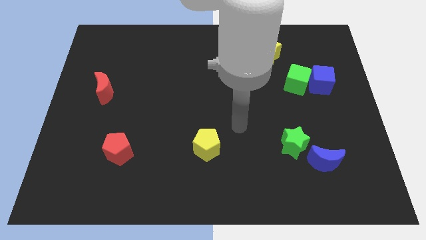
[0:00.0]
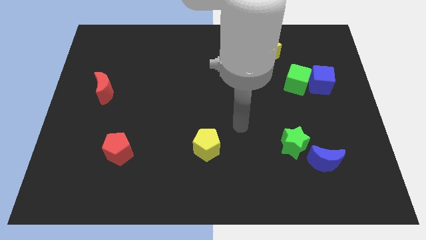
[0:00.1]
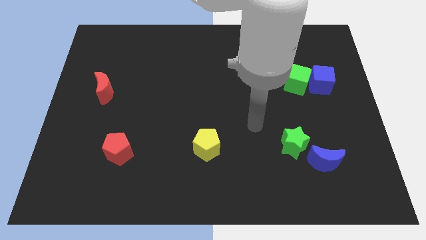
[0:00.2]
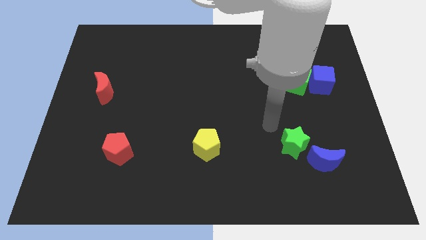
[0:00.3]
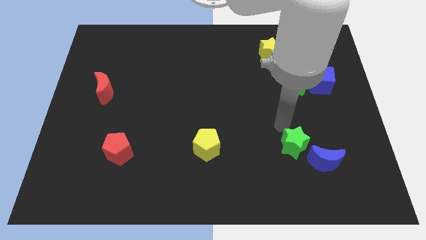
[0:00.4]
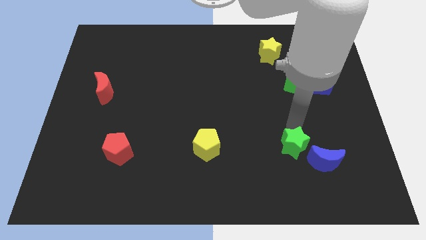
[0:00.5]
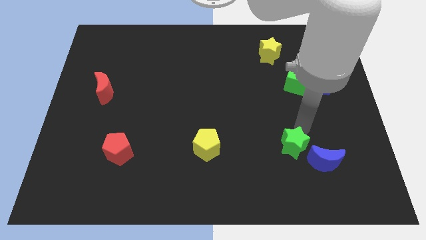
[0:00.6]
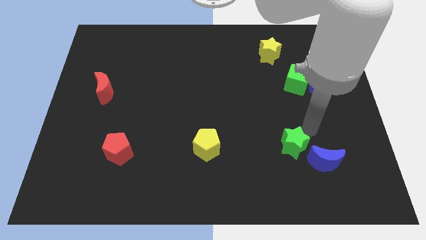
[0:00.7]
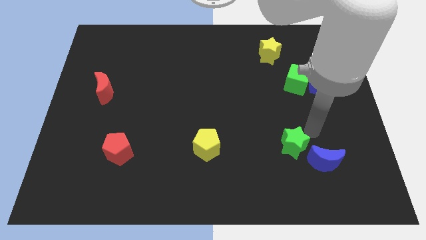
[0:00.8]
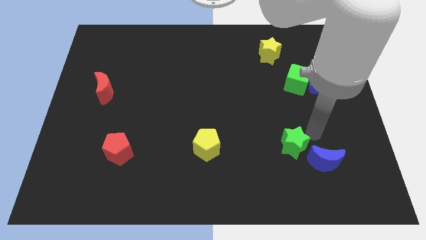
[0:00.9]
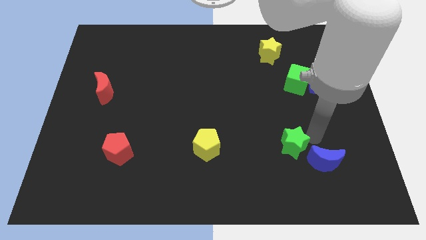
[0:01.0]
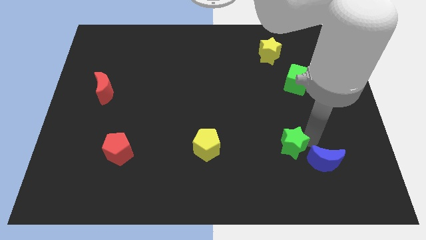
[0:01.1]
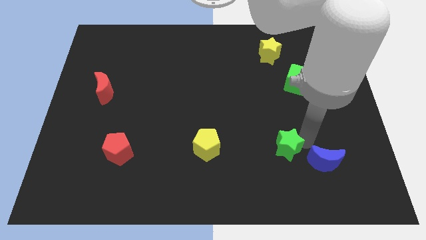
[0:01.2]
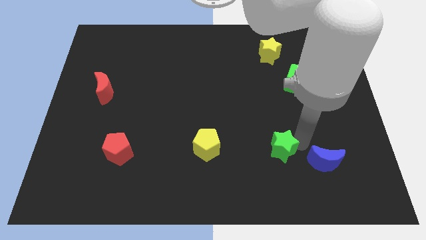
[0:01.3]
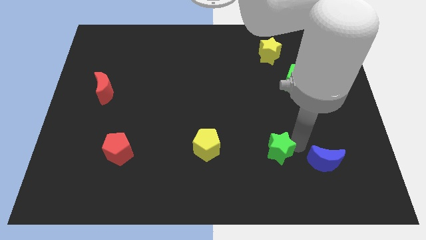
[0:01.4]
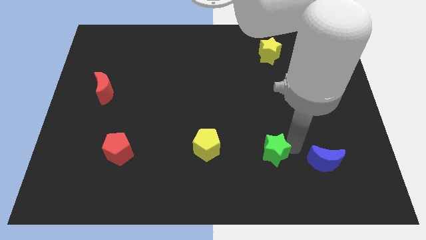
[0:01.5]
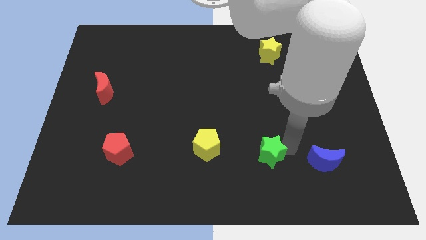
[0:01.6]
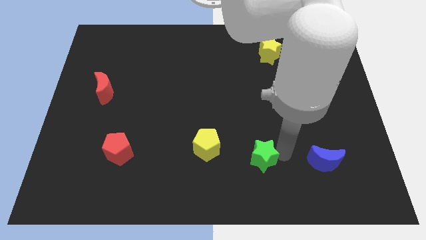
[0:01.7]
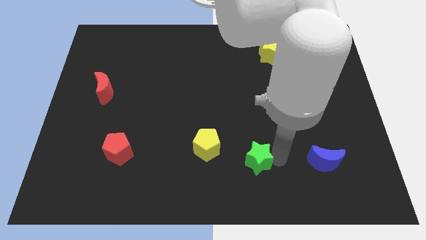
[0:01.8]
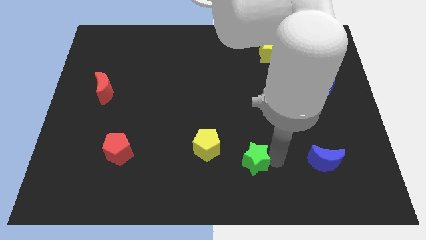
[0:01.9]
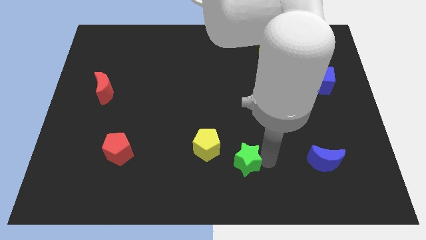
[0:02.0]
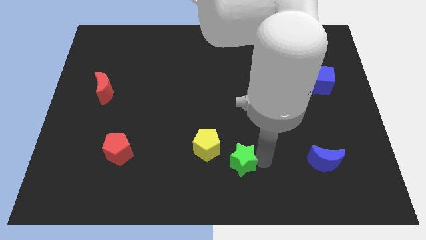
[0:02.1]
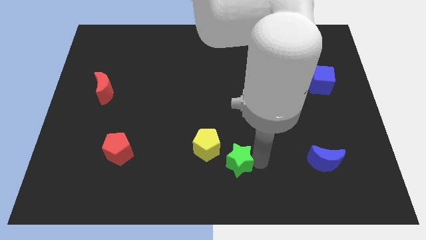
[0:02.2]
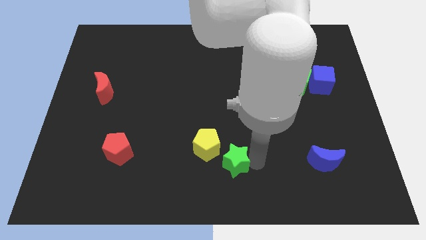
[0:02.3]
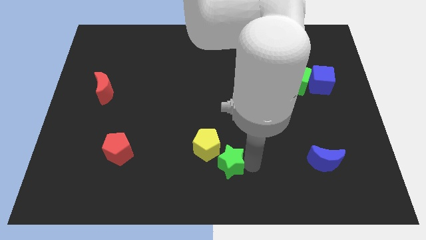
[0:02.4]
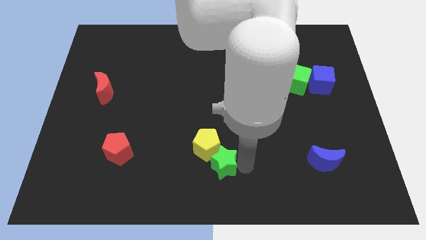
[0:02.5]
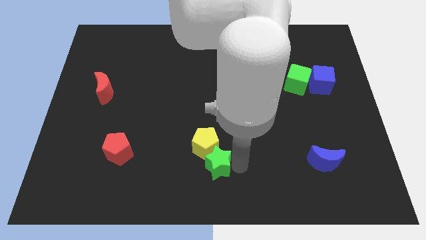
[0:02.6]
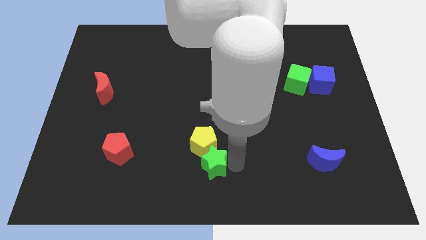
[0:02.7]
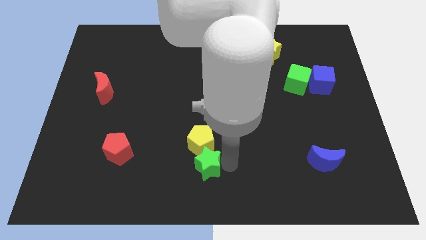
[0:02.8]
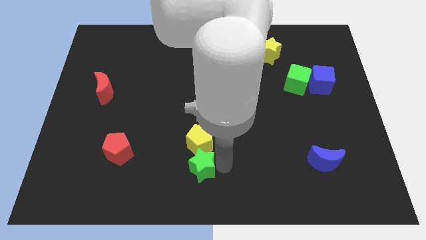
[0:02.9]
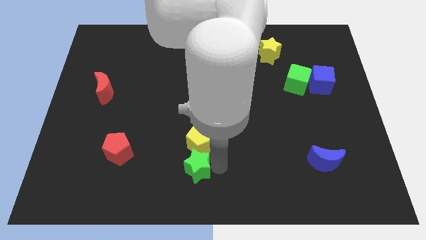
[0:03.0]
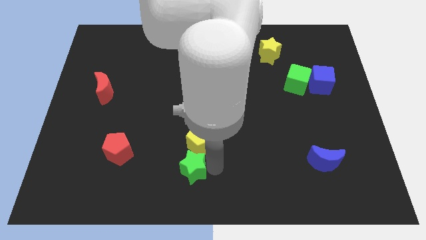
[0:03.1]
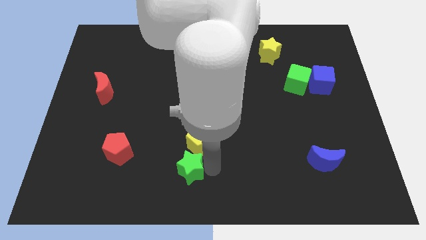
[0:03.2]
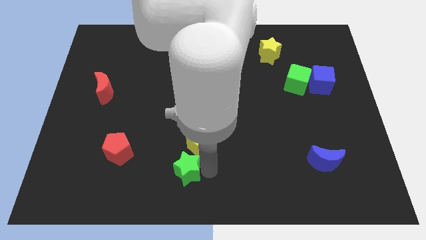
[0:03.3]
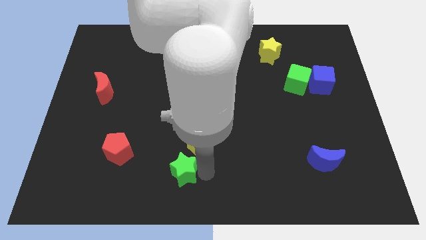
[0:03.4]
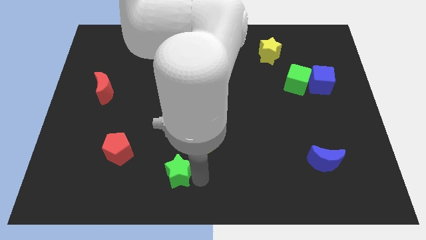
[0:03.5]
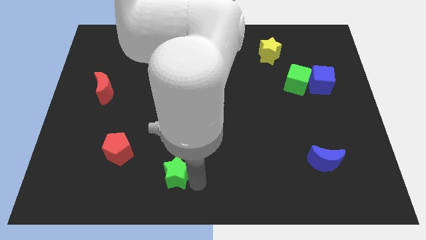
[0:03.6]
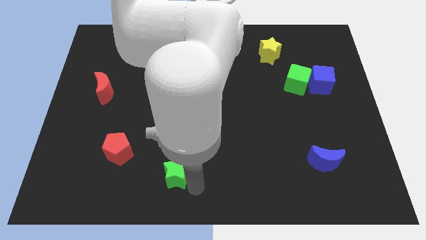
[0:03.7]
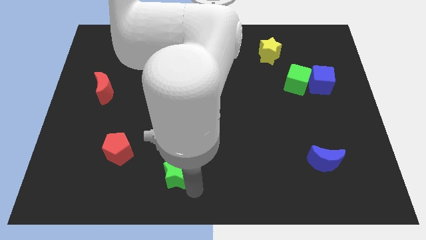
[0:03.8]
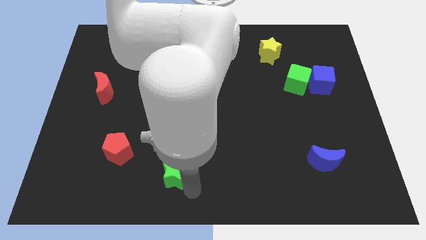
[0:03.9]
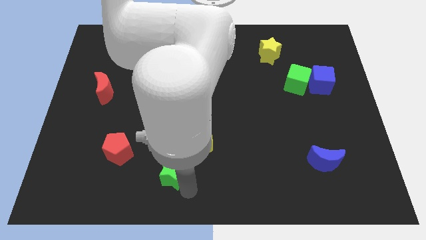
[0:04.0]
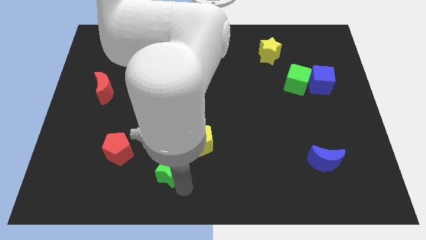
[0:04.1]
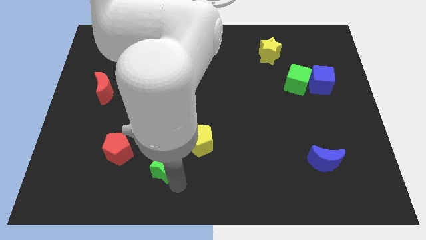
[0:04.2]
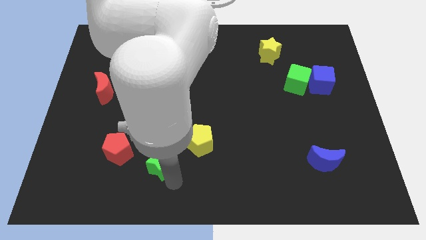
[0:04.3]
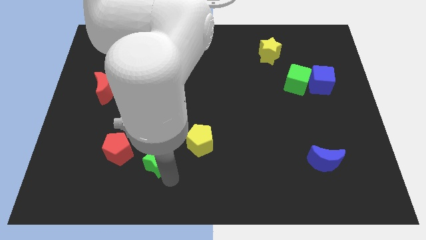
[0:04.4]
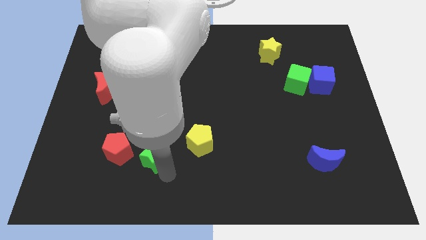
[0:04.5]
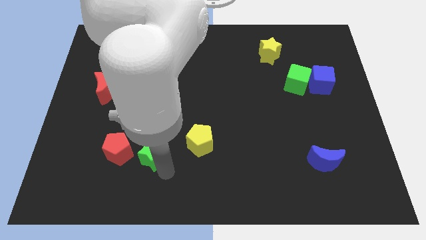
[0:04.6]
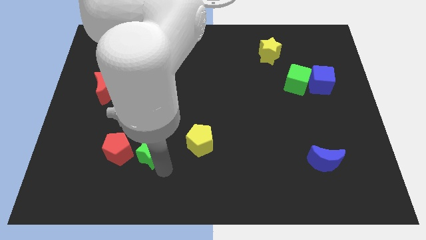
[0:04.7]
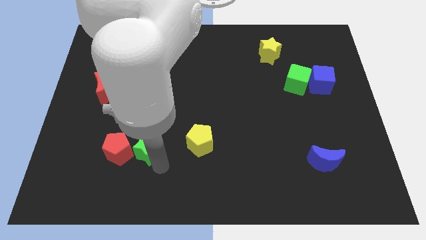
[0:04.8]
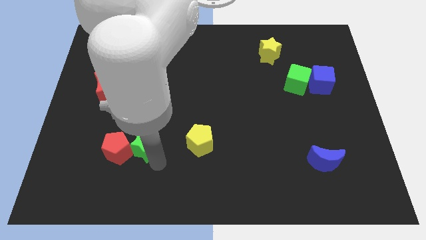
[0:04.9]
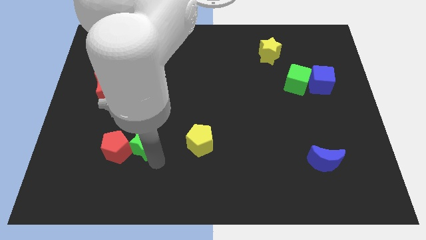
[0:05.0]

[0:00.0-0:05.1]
slide the green star to the red pentagon

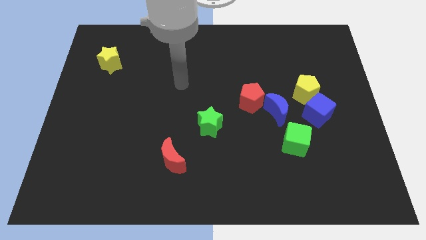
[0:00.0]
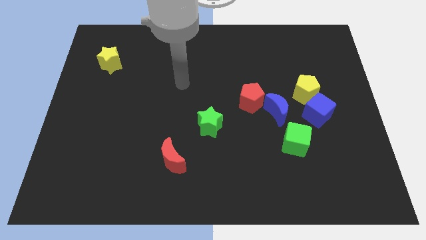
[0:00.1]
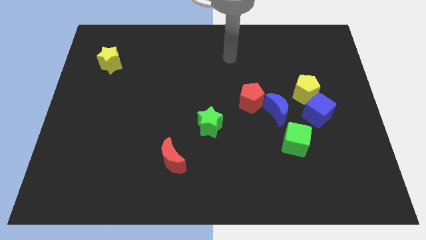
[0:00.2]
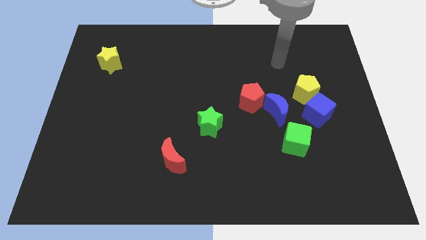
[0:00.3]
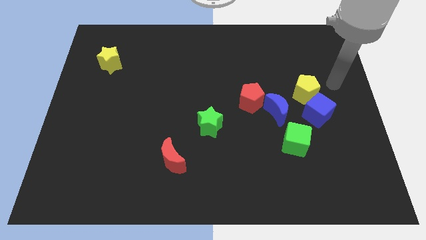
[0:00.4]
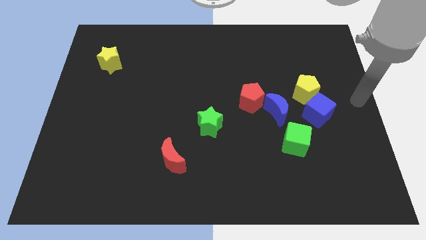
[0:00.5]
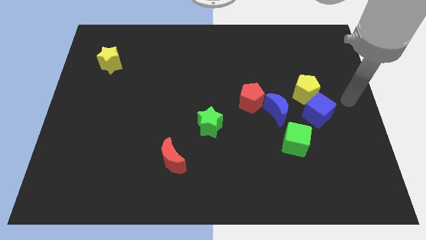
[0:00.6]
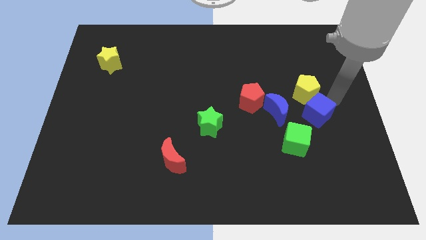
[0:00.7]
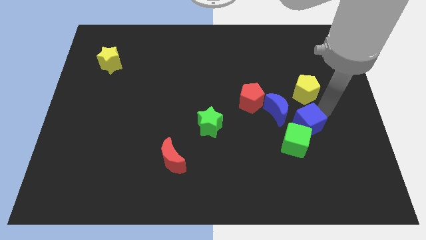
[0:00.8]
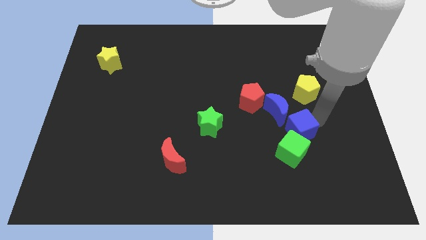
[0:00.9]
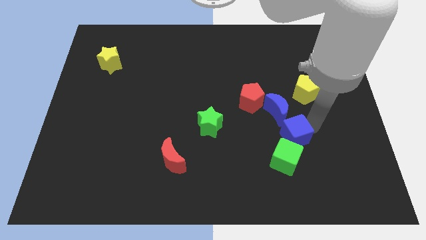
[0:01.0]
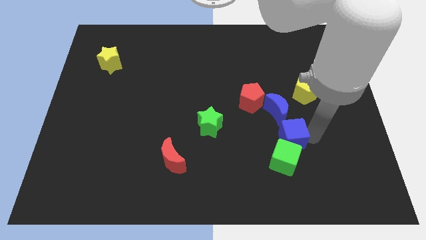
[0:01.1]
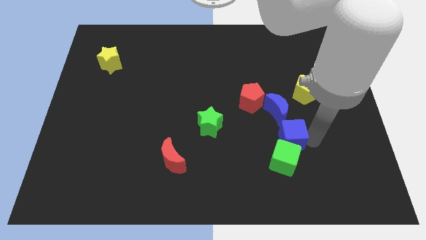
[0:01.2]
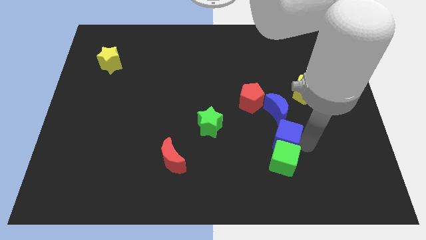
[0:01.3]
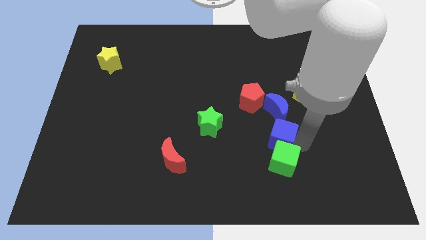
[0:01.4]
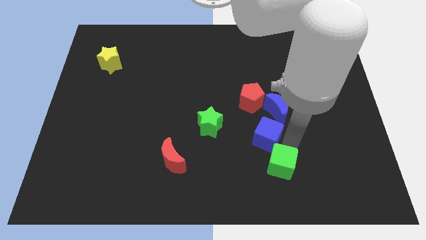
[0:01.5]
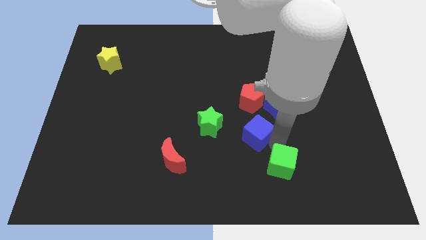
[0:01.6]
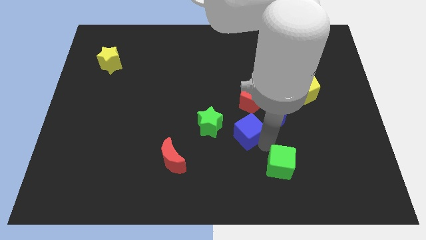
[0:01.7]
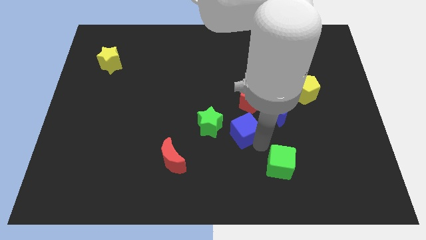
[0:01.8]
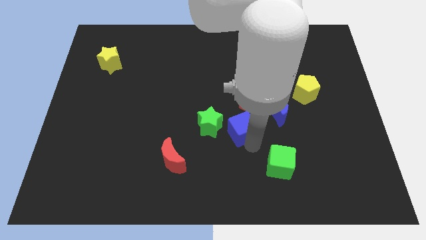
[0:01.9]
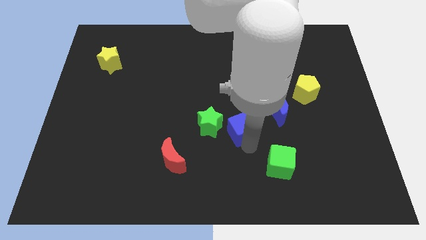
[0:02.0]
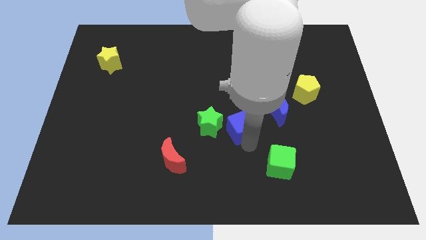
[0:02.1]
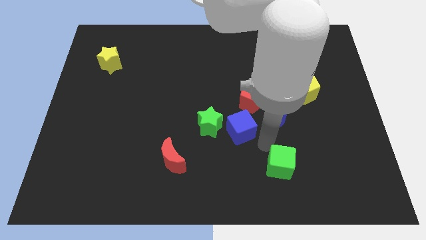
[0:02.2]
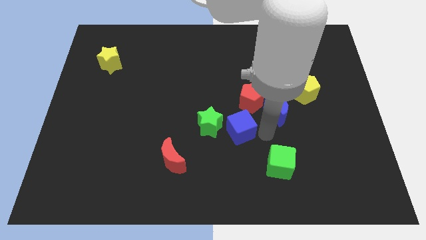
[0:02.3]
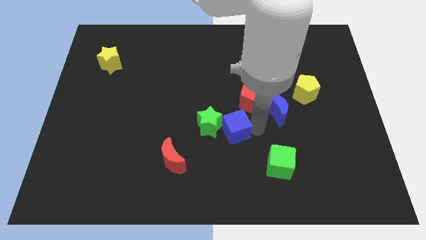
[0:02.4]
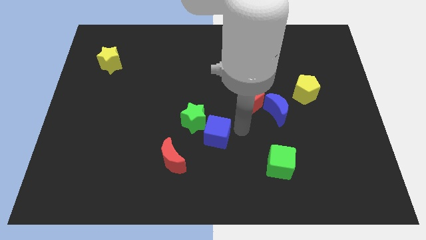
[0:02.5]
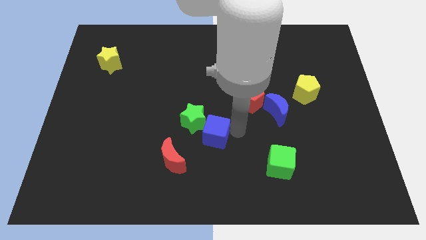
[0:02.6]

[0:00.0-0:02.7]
put the blue cube close to the green star

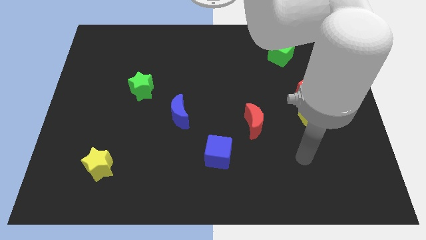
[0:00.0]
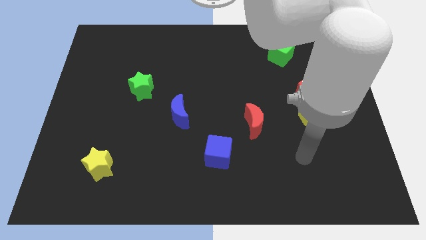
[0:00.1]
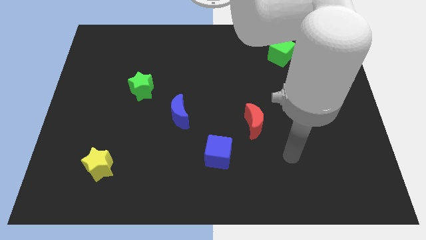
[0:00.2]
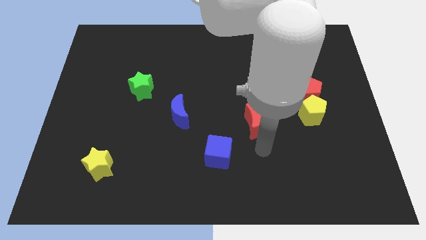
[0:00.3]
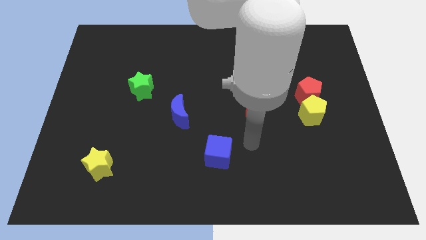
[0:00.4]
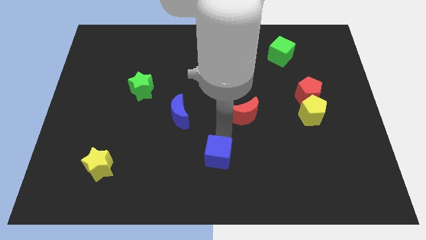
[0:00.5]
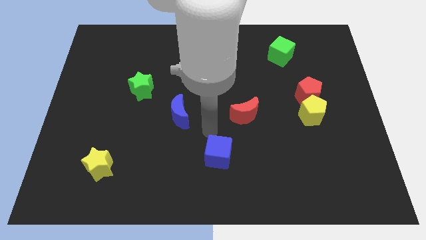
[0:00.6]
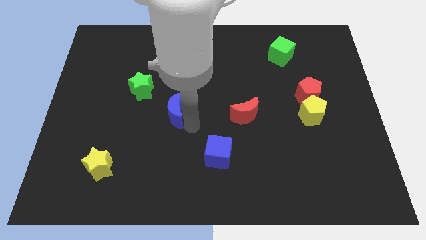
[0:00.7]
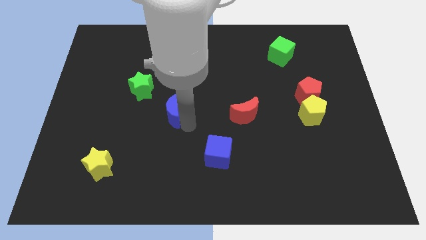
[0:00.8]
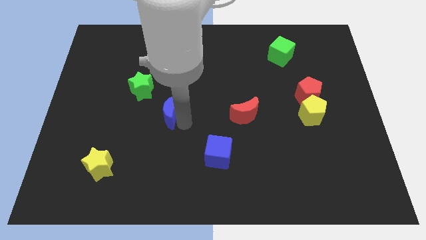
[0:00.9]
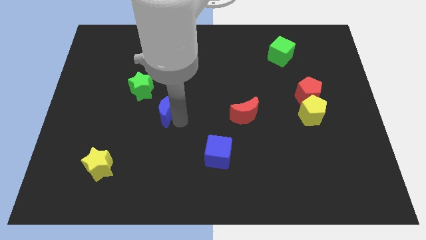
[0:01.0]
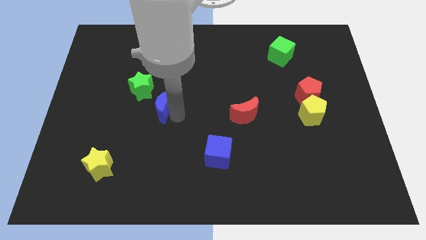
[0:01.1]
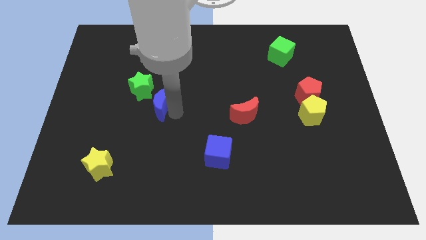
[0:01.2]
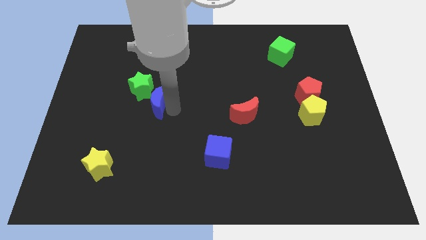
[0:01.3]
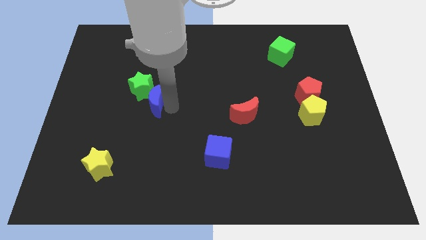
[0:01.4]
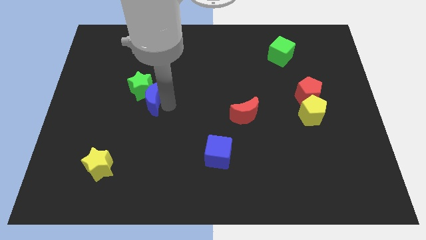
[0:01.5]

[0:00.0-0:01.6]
put the blue moon next to the green star
